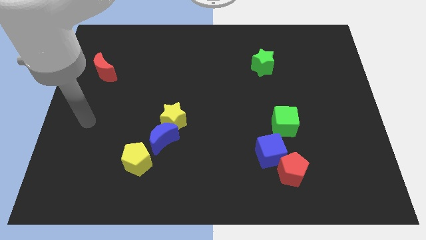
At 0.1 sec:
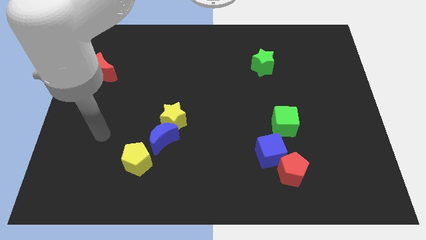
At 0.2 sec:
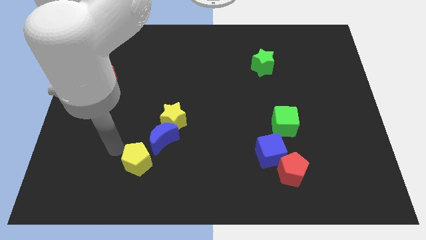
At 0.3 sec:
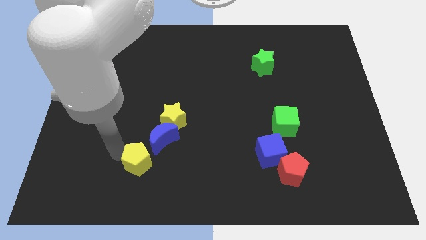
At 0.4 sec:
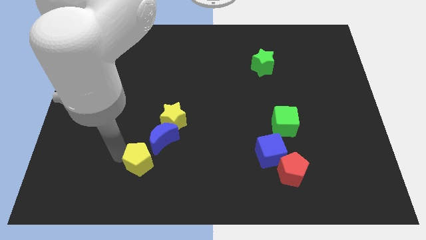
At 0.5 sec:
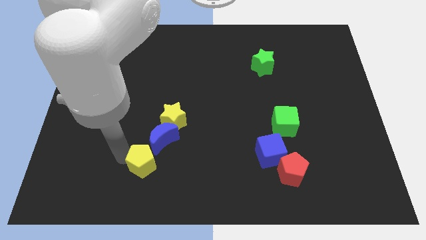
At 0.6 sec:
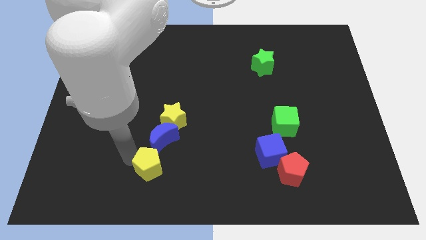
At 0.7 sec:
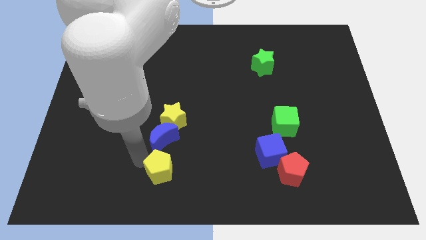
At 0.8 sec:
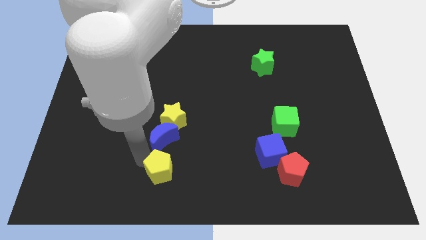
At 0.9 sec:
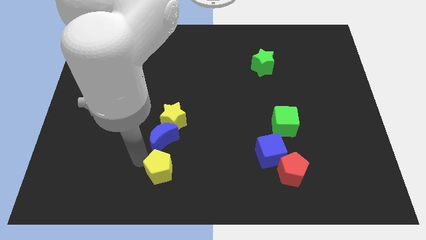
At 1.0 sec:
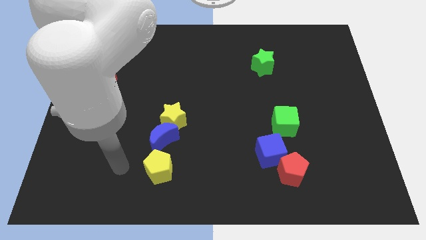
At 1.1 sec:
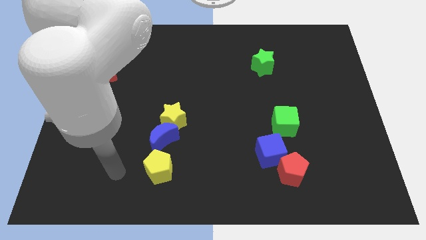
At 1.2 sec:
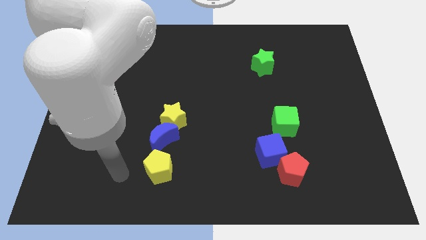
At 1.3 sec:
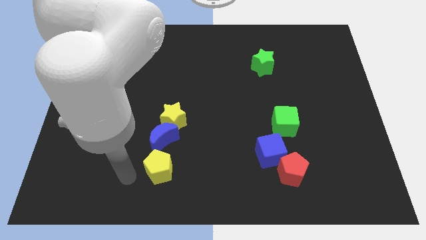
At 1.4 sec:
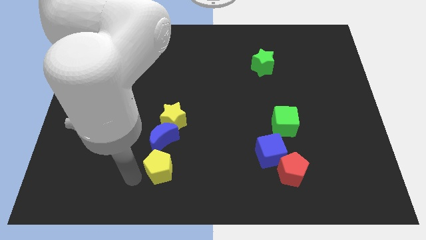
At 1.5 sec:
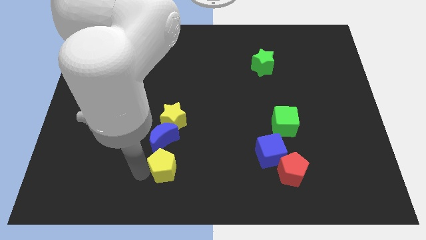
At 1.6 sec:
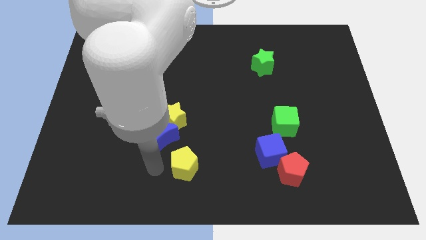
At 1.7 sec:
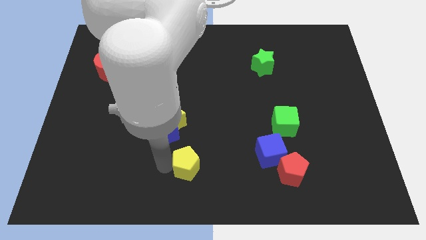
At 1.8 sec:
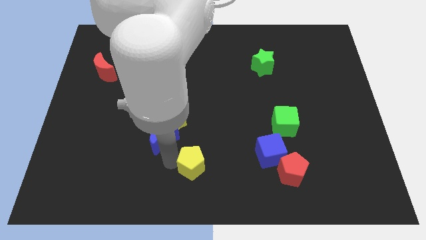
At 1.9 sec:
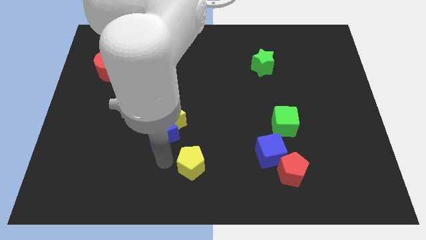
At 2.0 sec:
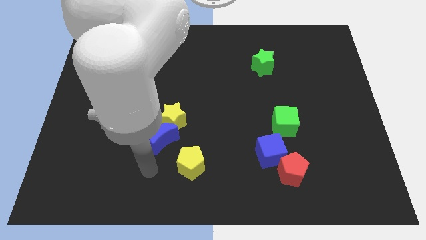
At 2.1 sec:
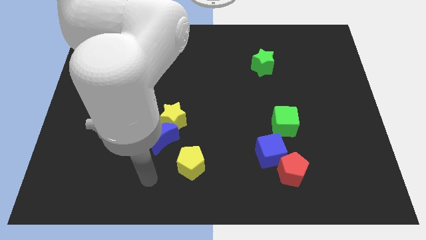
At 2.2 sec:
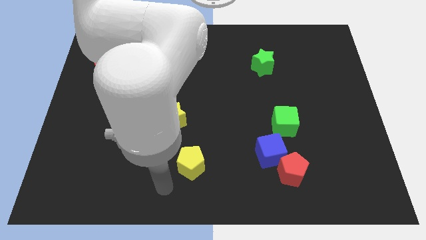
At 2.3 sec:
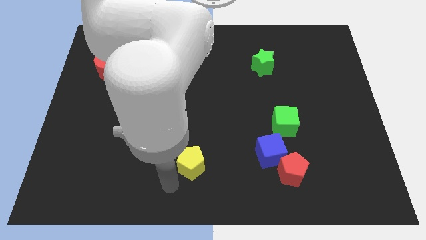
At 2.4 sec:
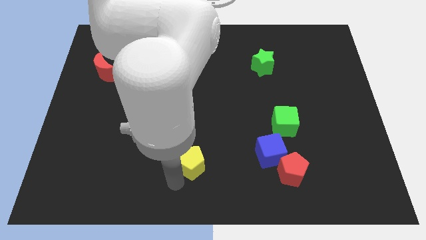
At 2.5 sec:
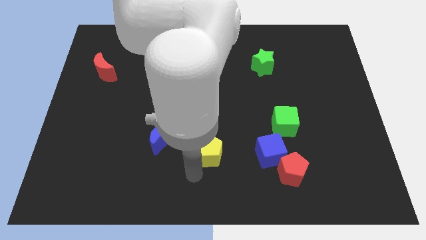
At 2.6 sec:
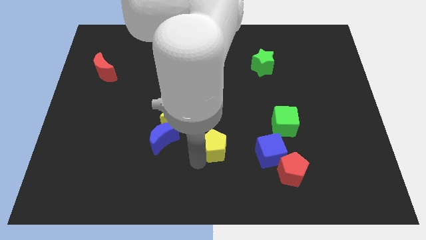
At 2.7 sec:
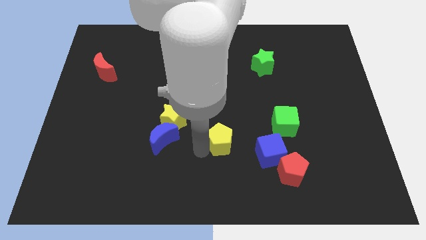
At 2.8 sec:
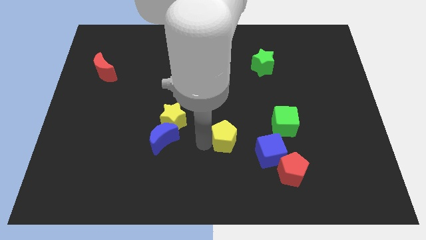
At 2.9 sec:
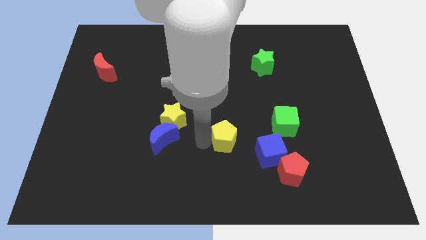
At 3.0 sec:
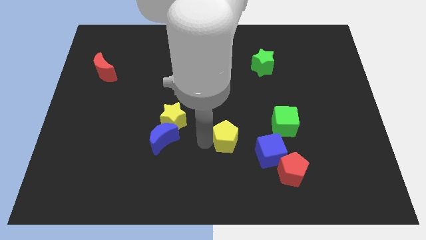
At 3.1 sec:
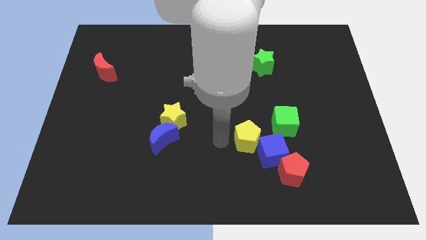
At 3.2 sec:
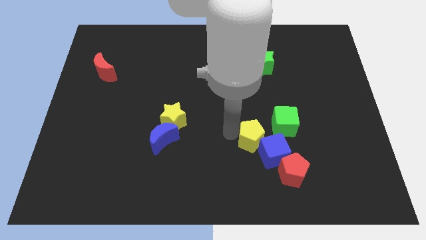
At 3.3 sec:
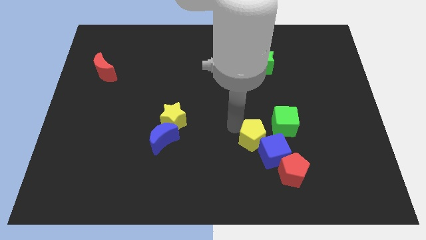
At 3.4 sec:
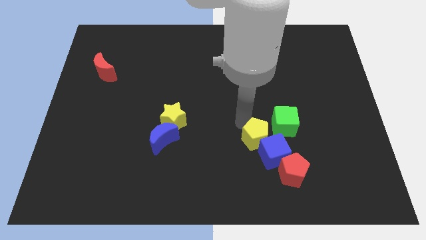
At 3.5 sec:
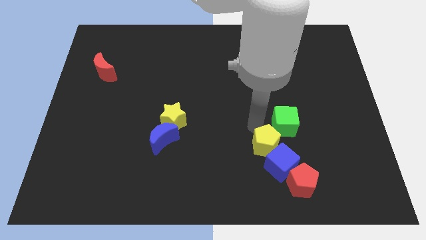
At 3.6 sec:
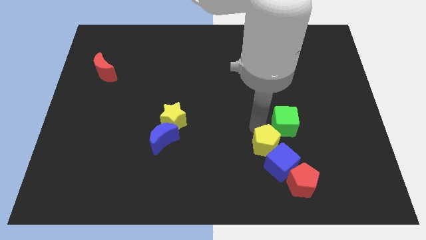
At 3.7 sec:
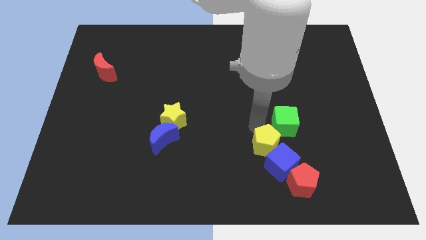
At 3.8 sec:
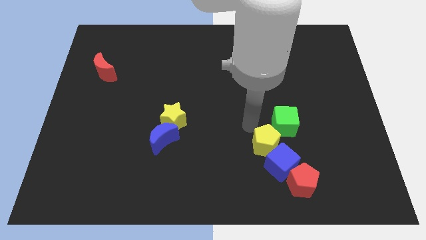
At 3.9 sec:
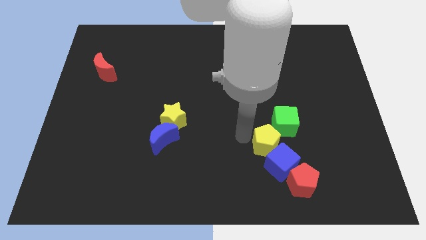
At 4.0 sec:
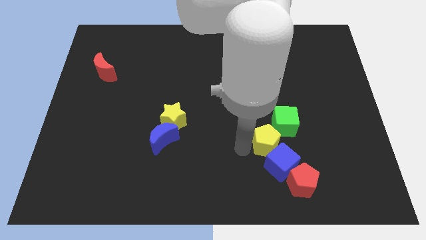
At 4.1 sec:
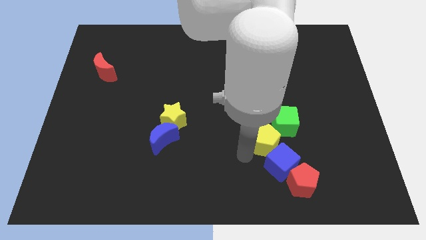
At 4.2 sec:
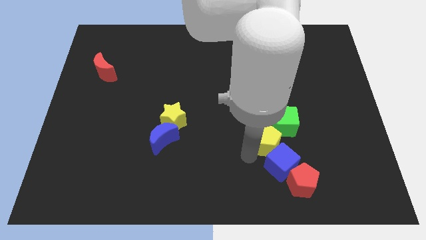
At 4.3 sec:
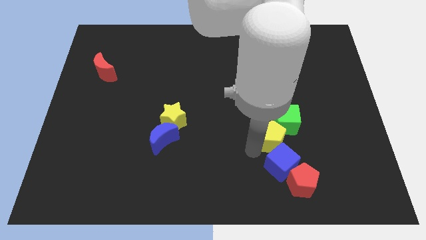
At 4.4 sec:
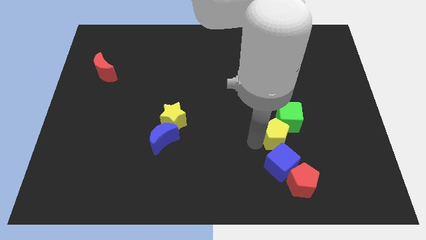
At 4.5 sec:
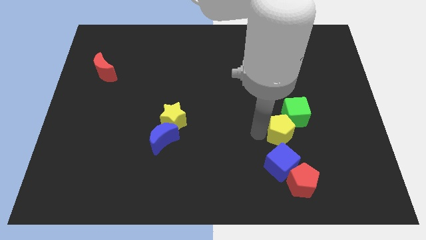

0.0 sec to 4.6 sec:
slide the yellow pentagon next to the green cube

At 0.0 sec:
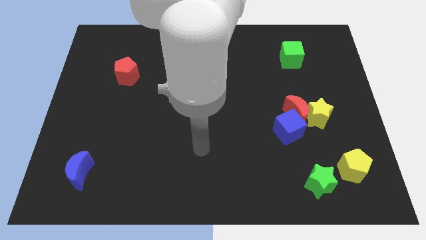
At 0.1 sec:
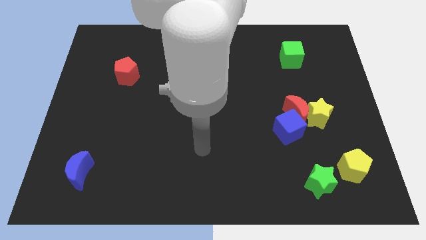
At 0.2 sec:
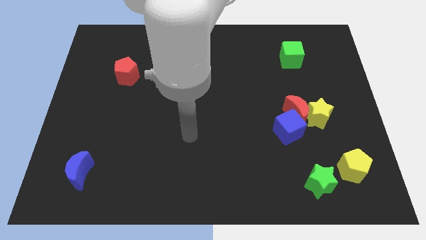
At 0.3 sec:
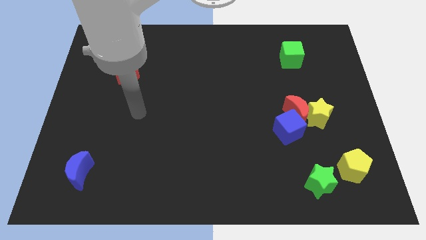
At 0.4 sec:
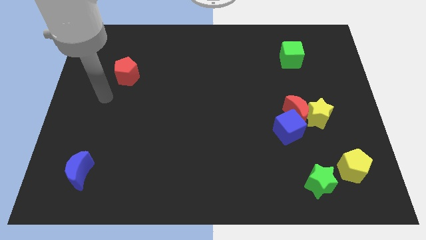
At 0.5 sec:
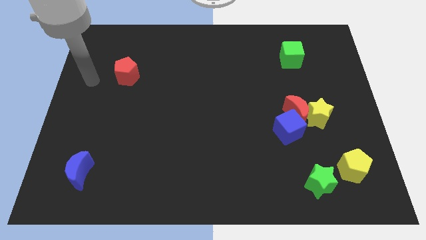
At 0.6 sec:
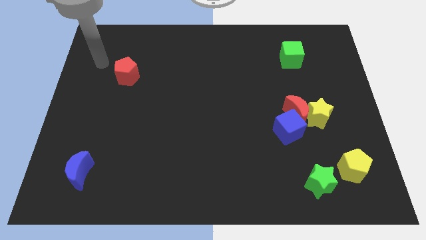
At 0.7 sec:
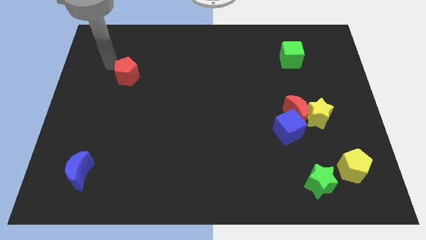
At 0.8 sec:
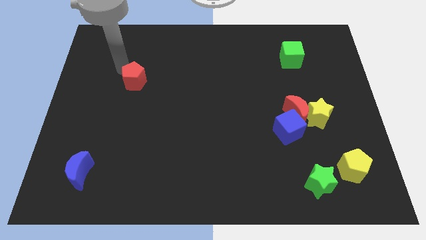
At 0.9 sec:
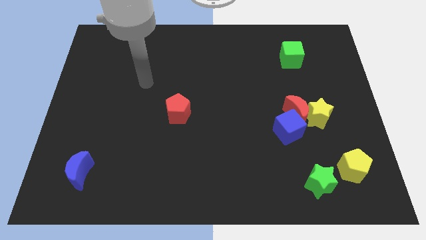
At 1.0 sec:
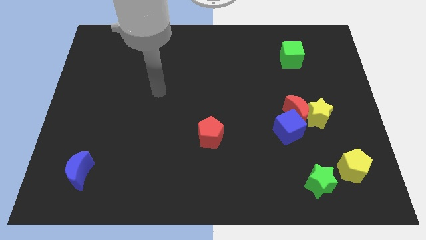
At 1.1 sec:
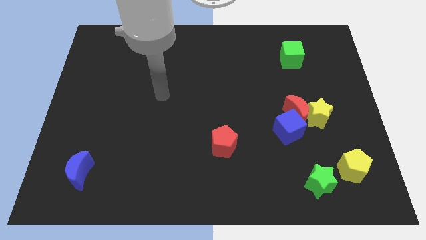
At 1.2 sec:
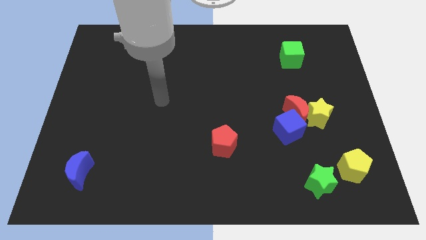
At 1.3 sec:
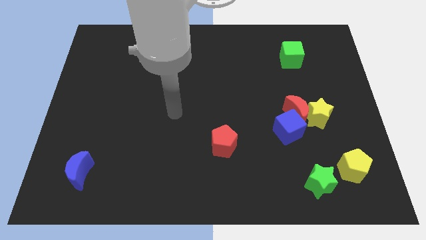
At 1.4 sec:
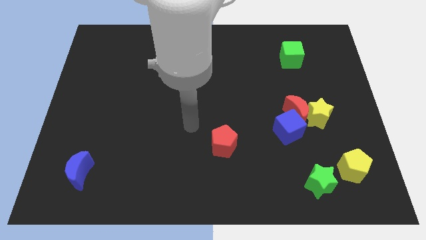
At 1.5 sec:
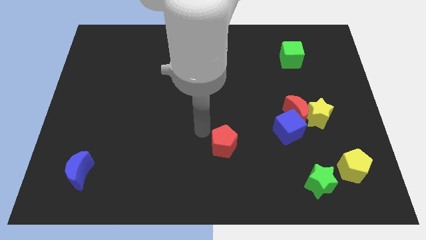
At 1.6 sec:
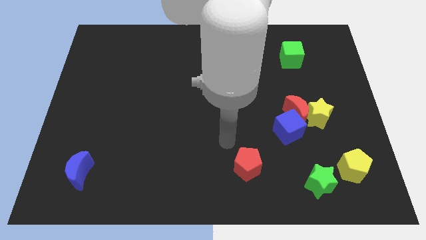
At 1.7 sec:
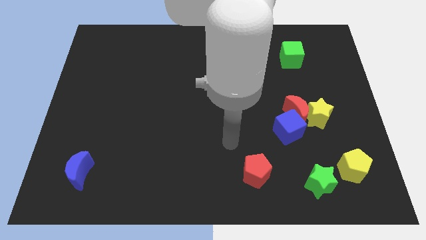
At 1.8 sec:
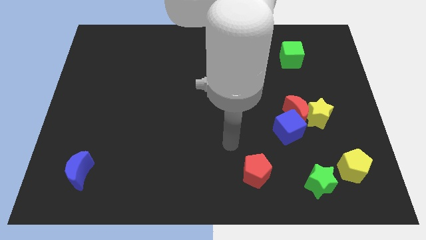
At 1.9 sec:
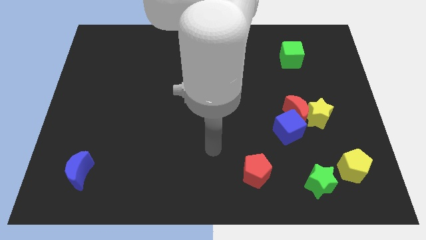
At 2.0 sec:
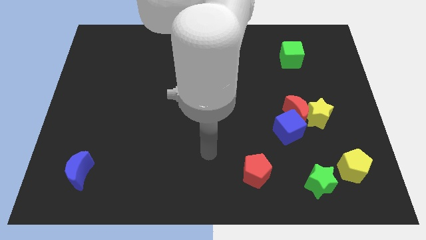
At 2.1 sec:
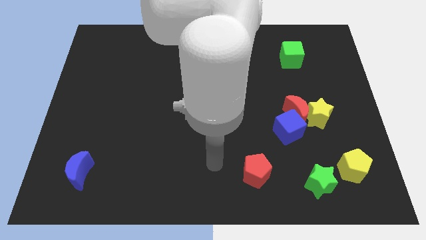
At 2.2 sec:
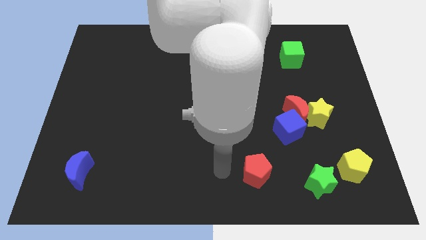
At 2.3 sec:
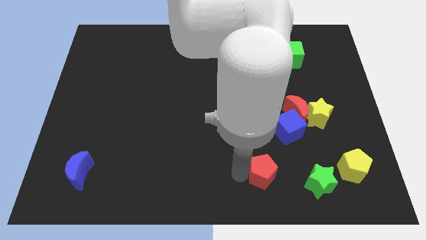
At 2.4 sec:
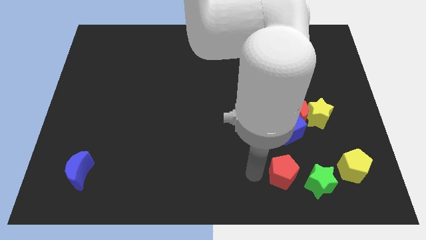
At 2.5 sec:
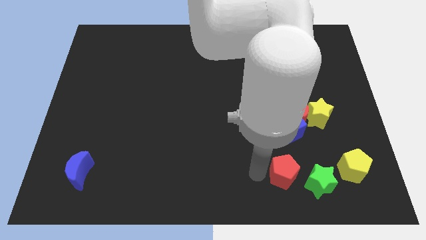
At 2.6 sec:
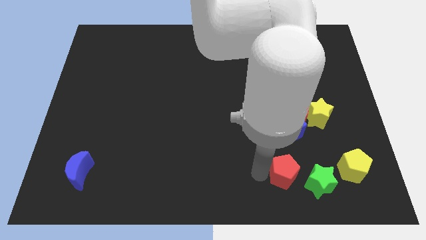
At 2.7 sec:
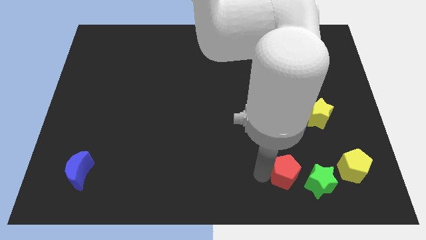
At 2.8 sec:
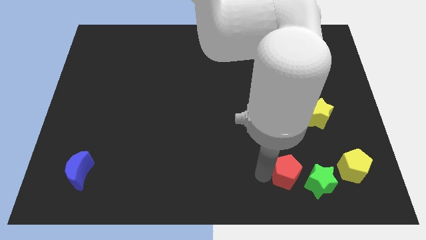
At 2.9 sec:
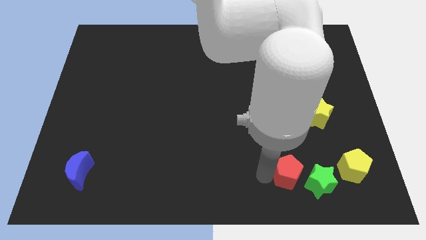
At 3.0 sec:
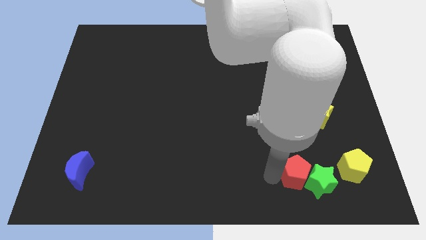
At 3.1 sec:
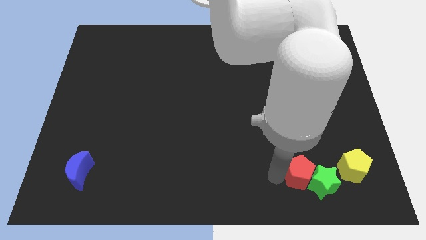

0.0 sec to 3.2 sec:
put the red pentagon towards the green star

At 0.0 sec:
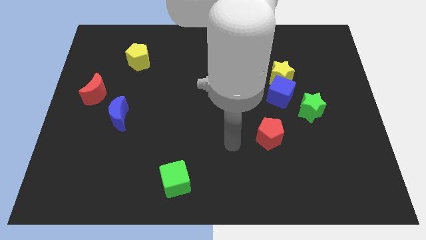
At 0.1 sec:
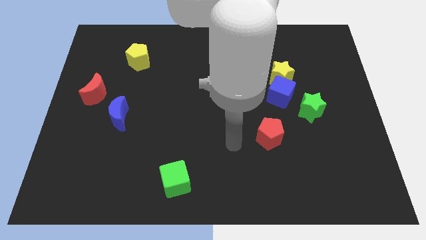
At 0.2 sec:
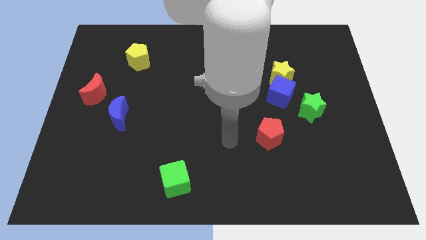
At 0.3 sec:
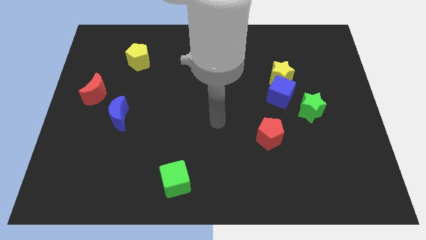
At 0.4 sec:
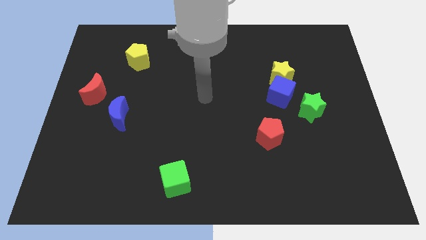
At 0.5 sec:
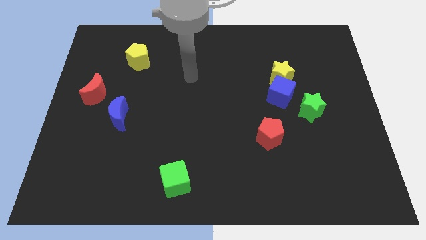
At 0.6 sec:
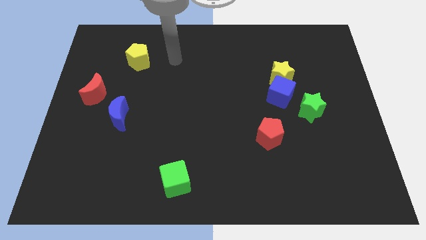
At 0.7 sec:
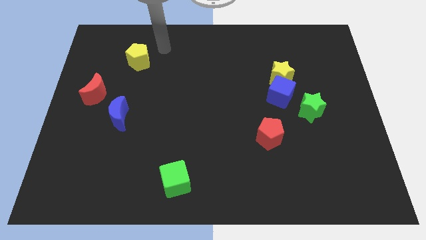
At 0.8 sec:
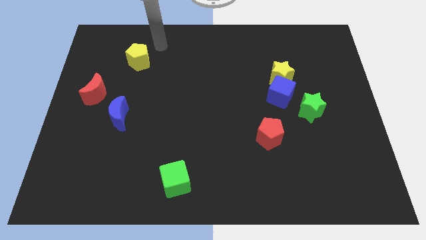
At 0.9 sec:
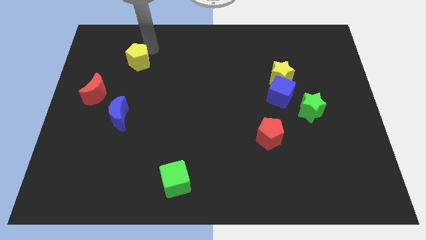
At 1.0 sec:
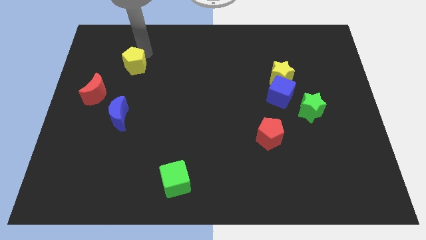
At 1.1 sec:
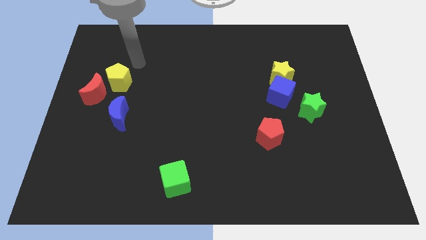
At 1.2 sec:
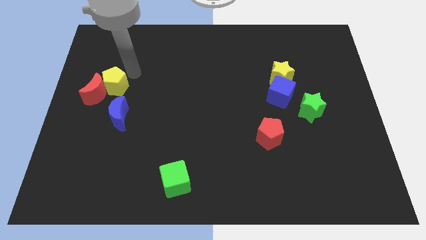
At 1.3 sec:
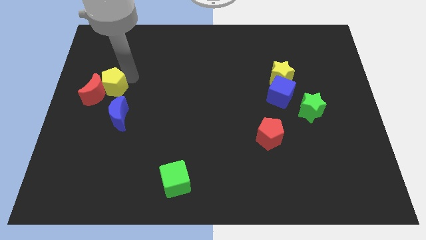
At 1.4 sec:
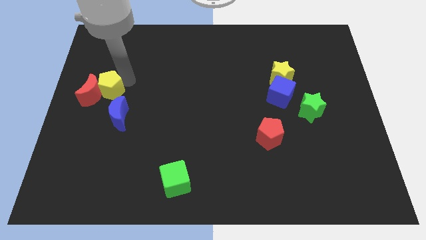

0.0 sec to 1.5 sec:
slide the yellow pentagon towards the red moon
